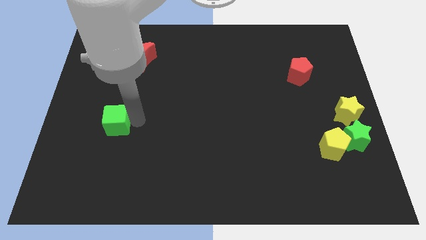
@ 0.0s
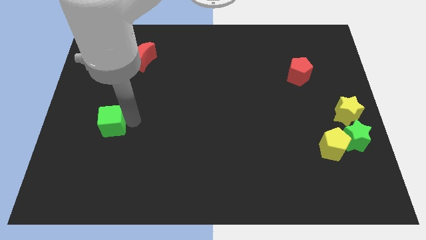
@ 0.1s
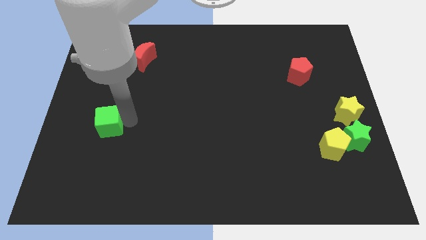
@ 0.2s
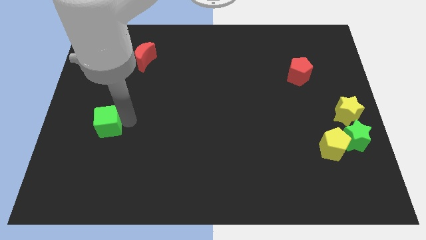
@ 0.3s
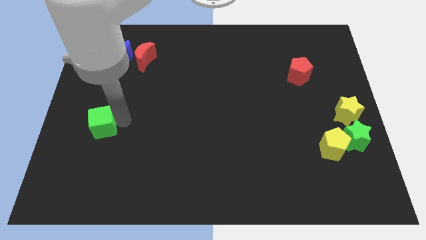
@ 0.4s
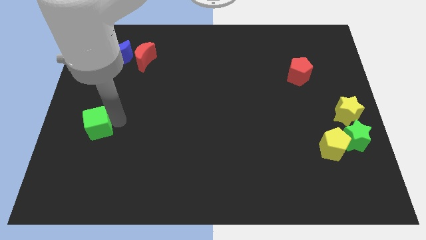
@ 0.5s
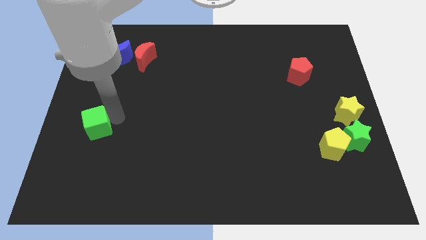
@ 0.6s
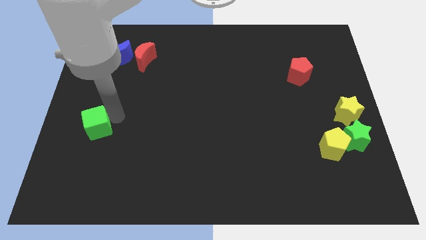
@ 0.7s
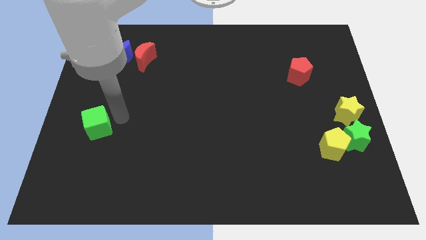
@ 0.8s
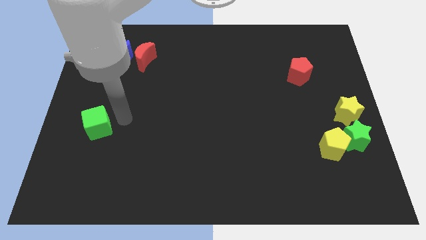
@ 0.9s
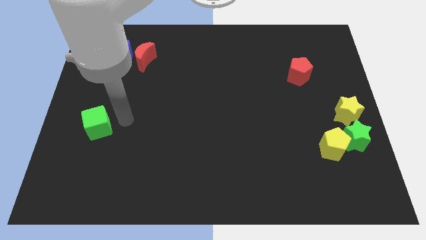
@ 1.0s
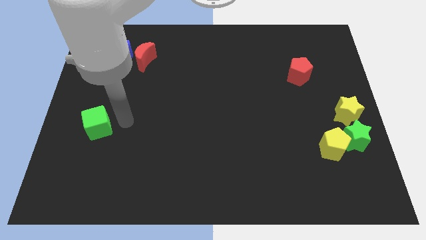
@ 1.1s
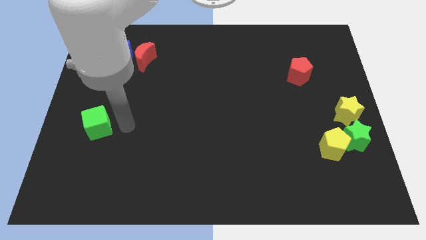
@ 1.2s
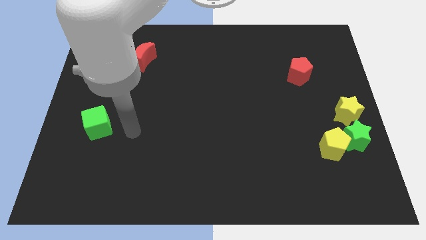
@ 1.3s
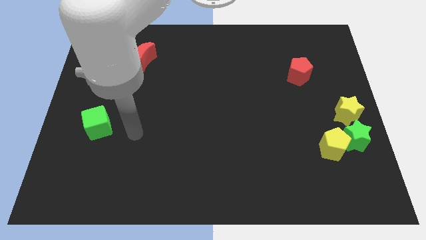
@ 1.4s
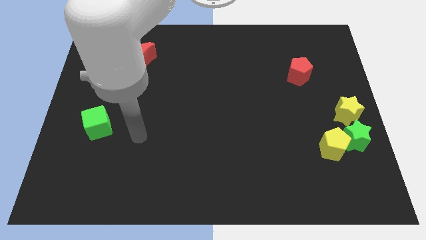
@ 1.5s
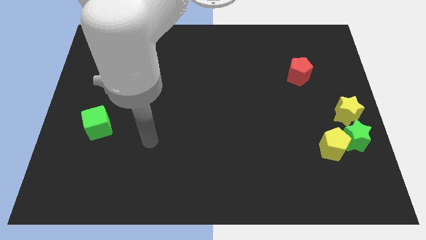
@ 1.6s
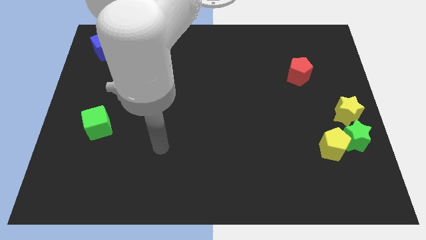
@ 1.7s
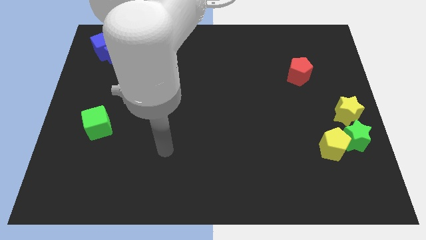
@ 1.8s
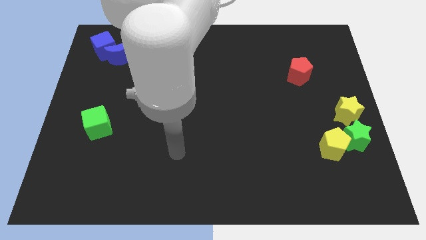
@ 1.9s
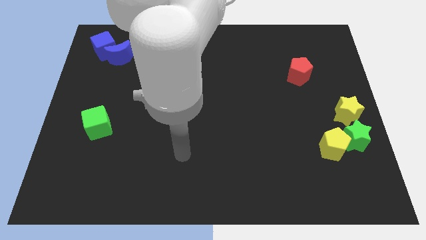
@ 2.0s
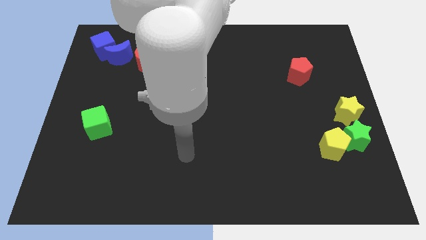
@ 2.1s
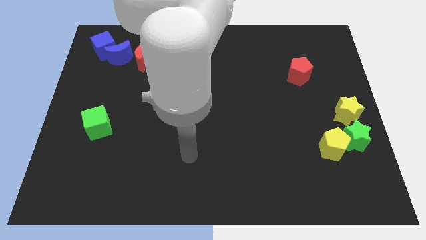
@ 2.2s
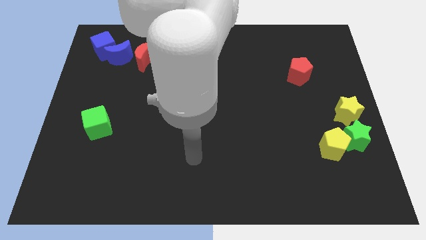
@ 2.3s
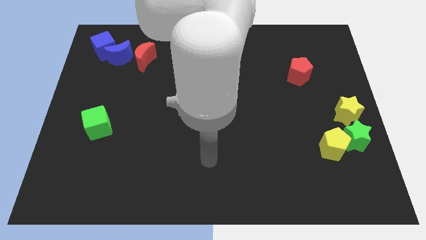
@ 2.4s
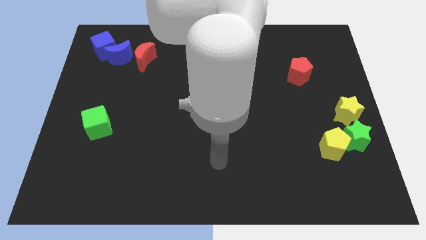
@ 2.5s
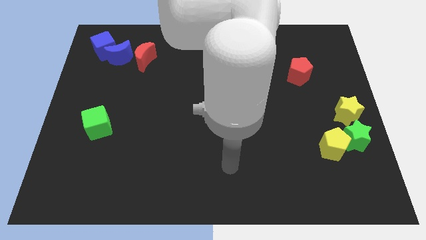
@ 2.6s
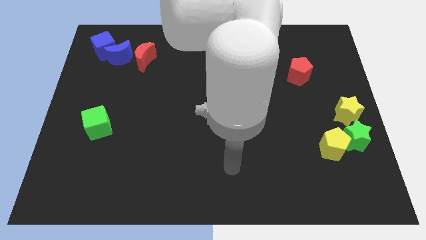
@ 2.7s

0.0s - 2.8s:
push the green cube slightly to the left

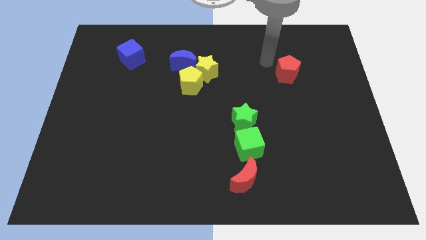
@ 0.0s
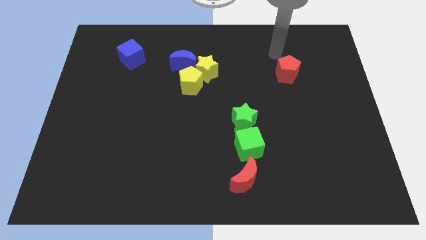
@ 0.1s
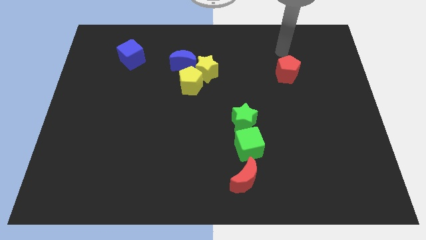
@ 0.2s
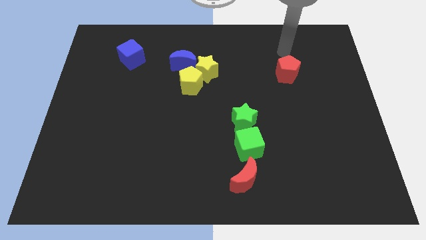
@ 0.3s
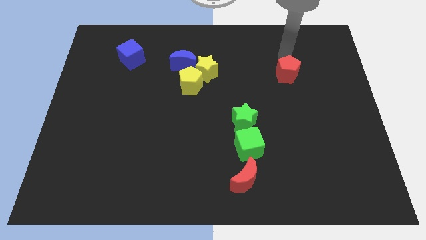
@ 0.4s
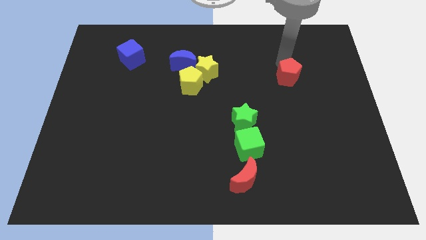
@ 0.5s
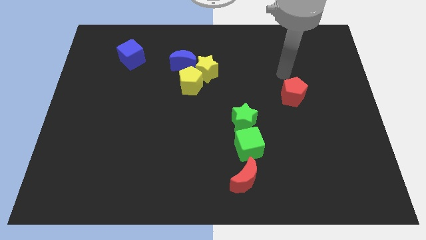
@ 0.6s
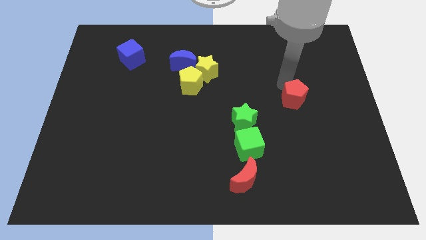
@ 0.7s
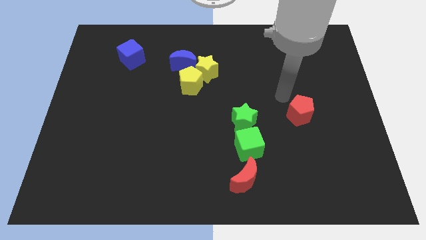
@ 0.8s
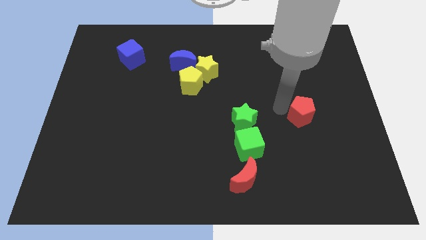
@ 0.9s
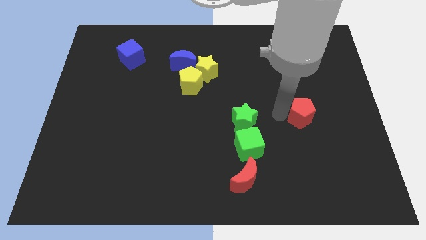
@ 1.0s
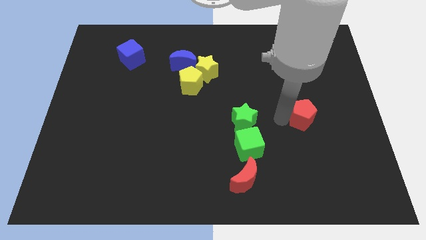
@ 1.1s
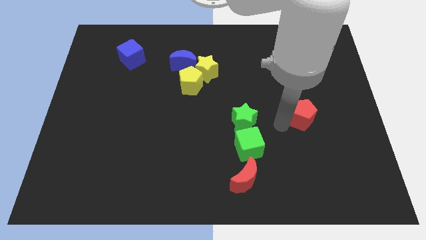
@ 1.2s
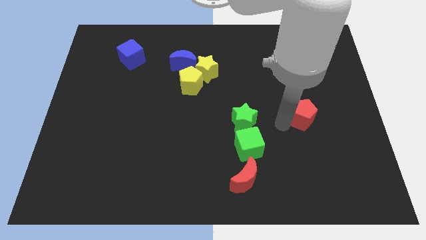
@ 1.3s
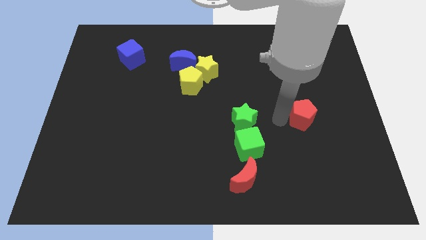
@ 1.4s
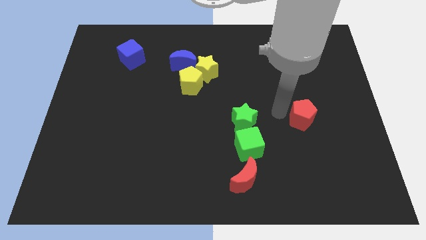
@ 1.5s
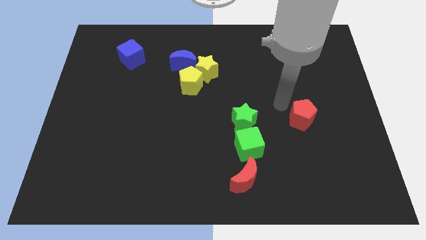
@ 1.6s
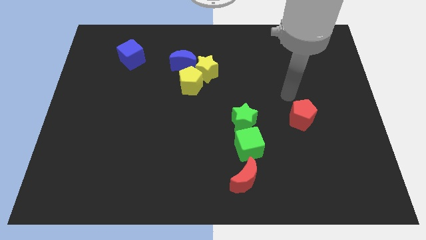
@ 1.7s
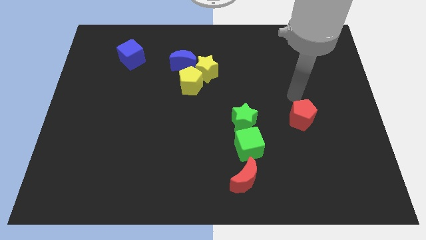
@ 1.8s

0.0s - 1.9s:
place the red pentagon right to the green star

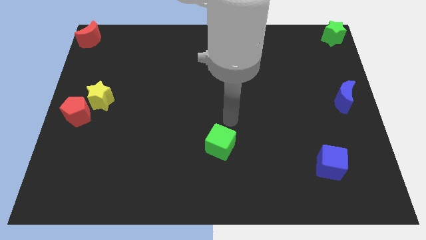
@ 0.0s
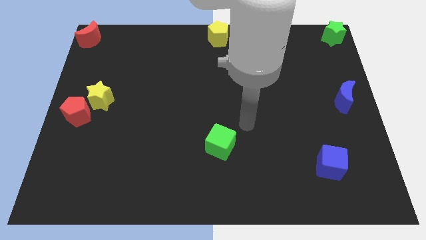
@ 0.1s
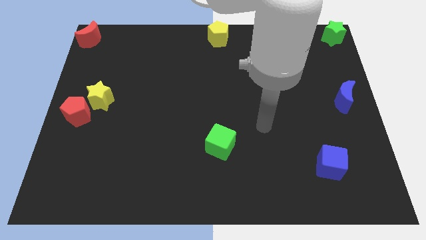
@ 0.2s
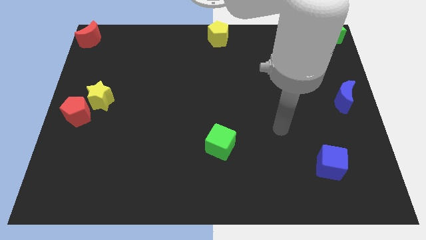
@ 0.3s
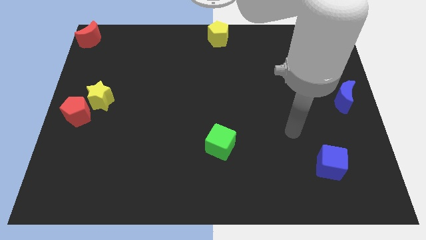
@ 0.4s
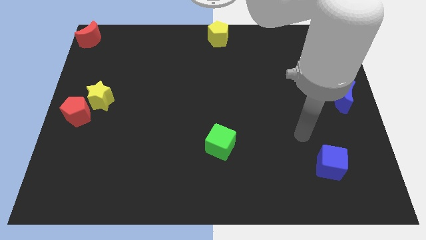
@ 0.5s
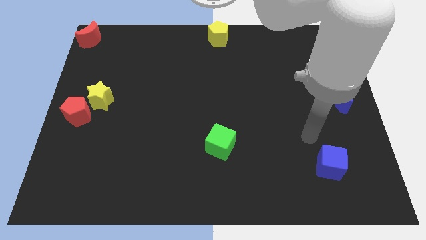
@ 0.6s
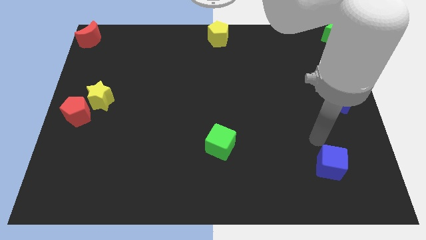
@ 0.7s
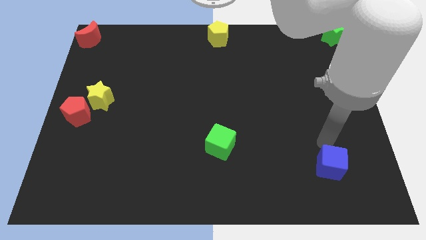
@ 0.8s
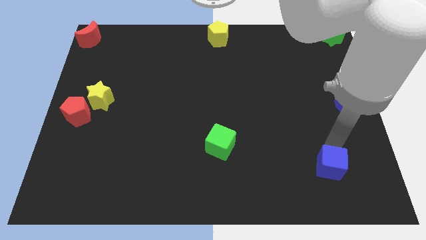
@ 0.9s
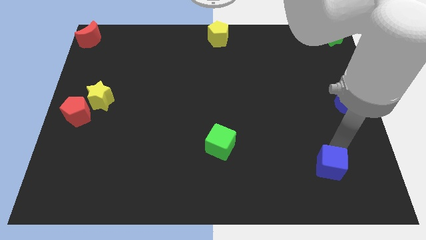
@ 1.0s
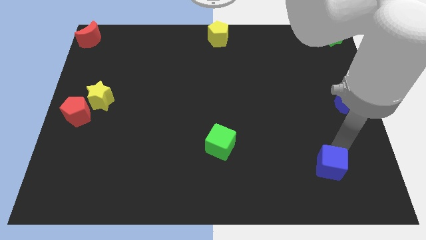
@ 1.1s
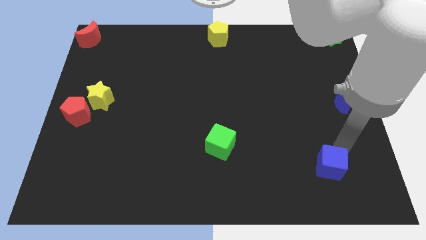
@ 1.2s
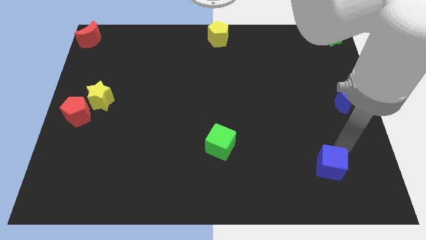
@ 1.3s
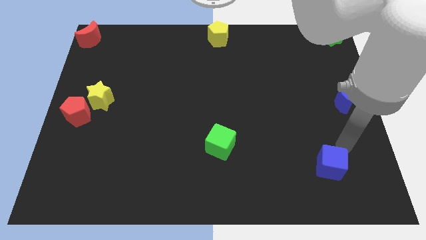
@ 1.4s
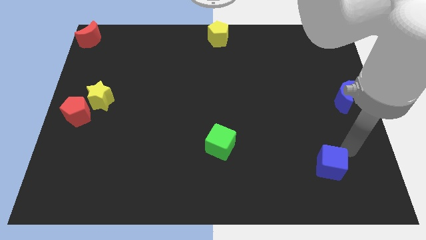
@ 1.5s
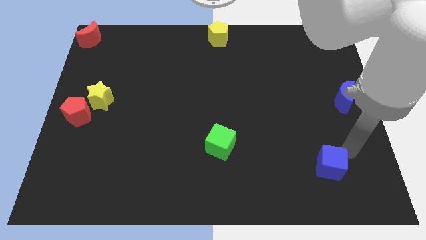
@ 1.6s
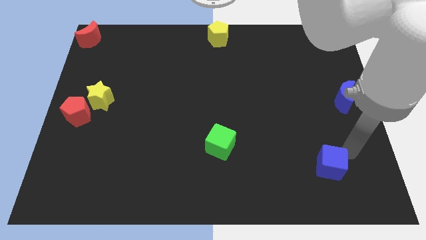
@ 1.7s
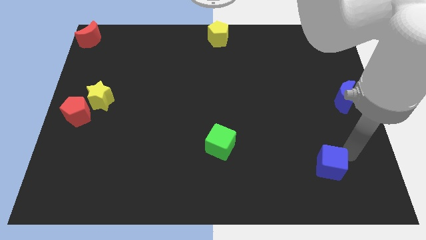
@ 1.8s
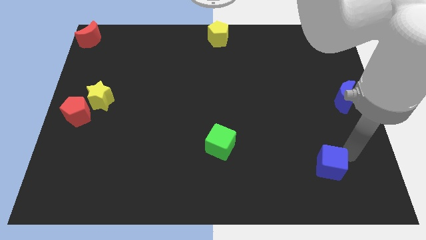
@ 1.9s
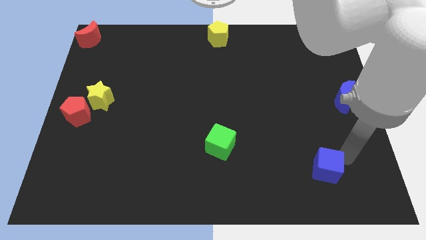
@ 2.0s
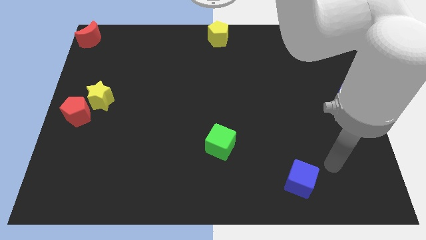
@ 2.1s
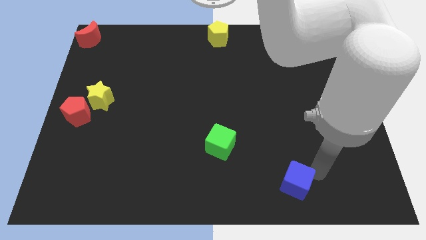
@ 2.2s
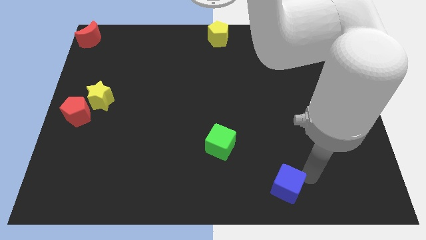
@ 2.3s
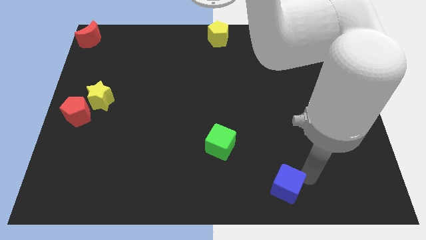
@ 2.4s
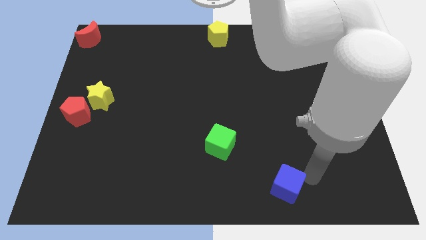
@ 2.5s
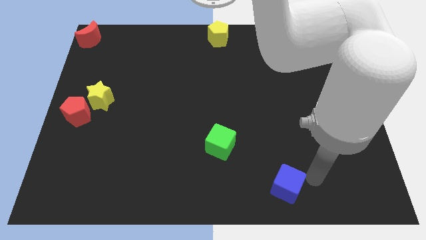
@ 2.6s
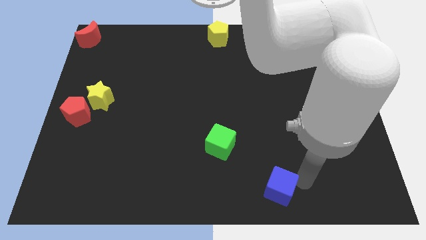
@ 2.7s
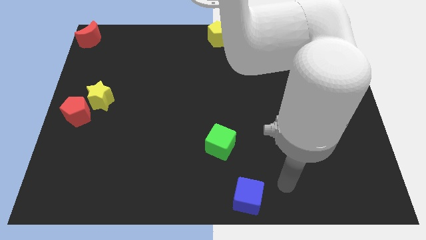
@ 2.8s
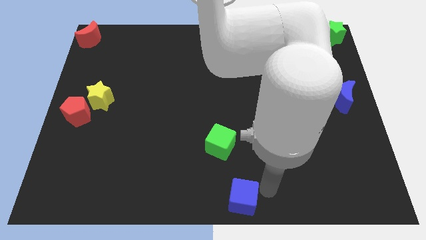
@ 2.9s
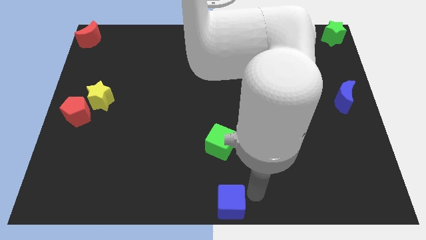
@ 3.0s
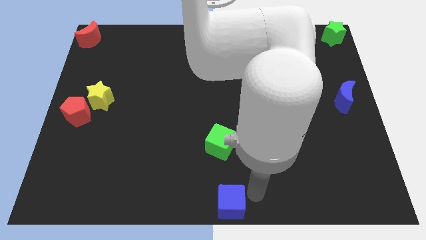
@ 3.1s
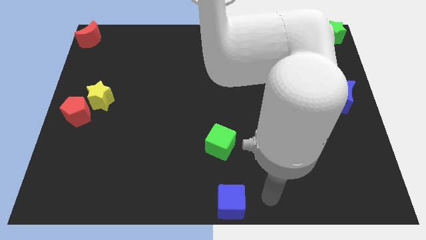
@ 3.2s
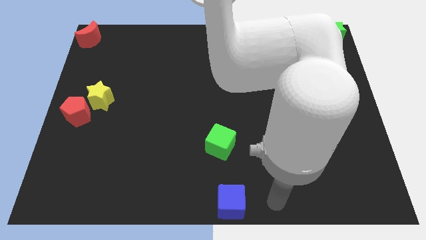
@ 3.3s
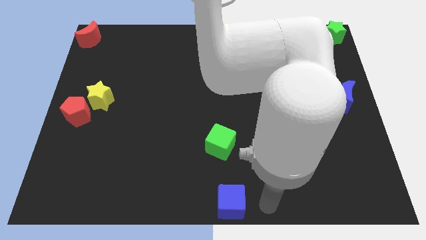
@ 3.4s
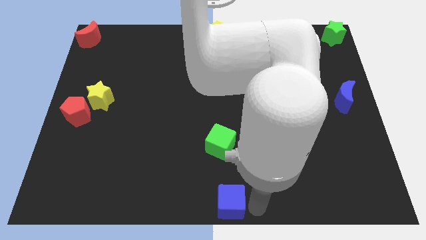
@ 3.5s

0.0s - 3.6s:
put the blue cube at the bottom center of the board

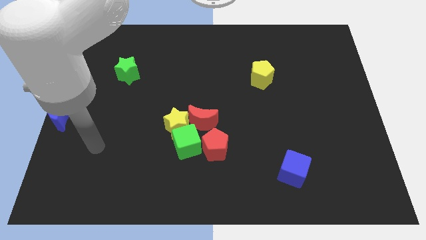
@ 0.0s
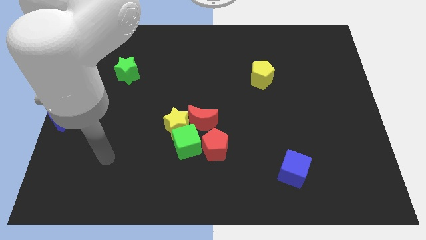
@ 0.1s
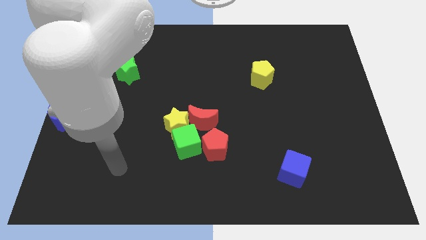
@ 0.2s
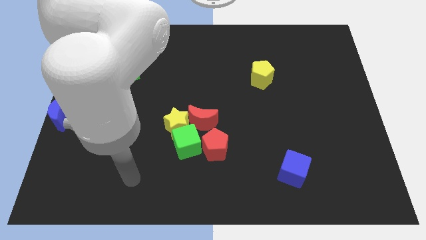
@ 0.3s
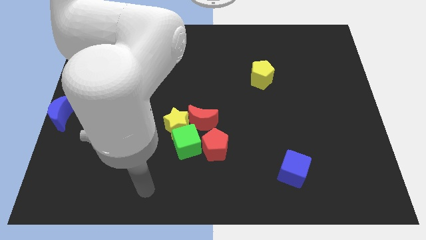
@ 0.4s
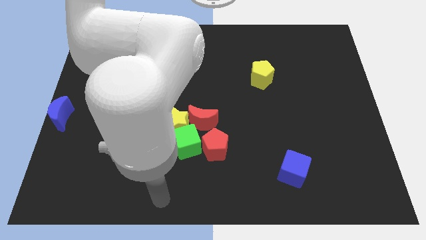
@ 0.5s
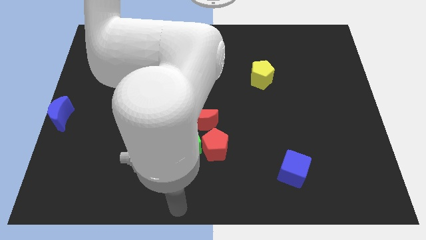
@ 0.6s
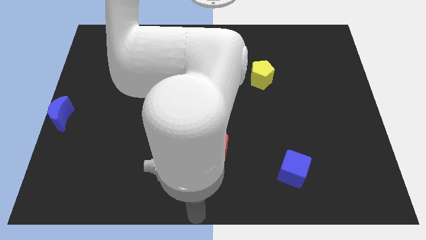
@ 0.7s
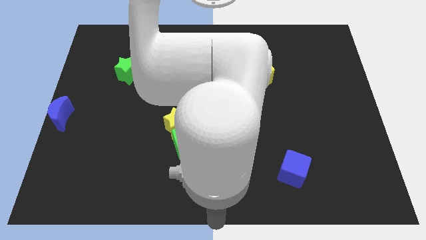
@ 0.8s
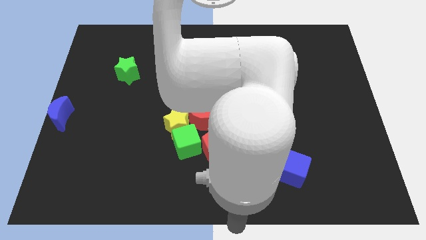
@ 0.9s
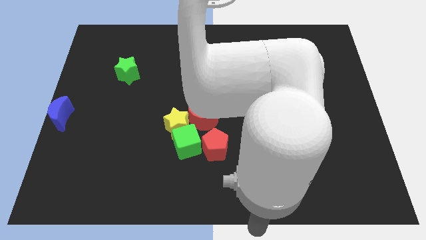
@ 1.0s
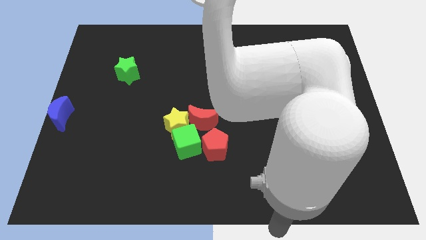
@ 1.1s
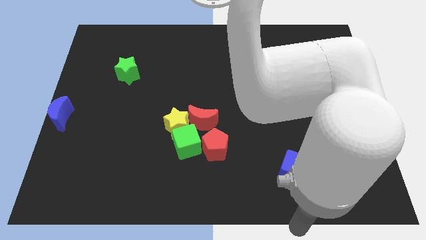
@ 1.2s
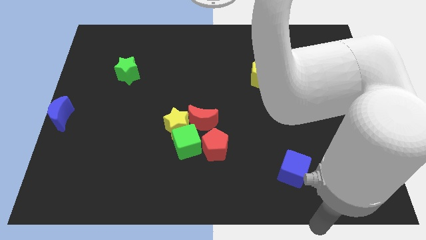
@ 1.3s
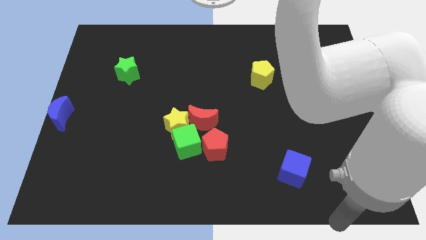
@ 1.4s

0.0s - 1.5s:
move the arm away from the blue crescent
